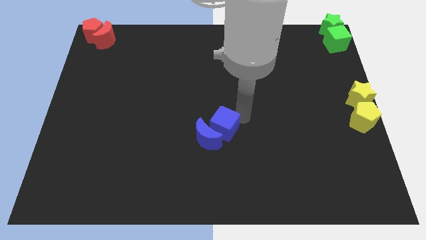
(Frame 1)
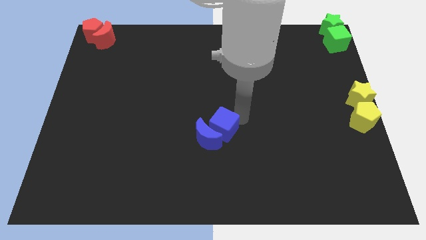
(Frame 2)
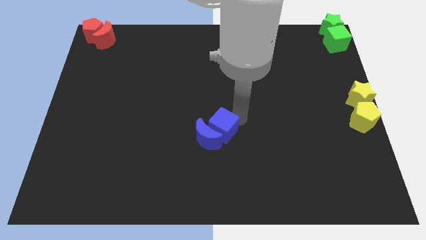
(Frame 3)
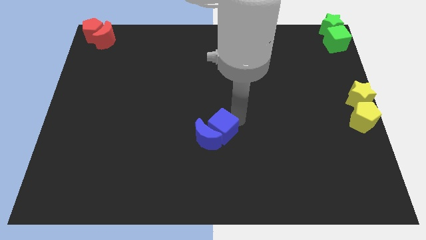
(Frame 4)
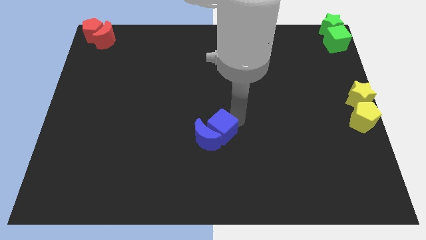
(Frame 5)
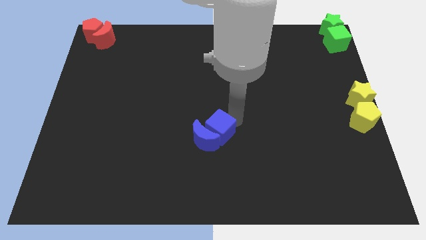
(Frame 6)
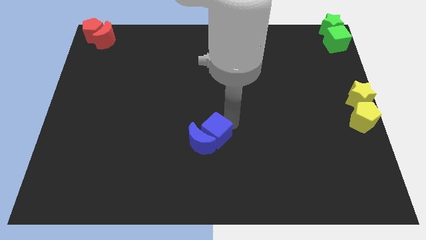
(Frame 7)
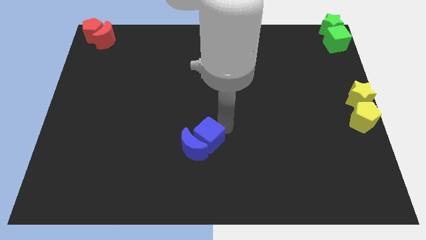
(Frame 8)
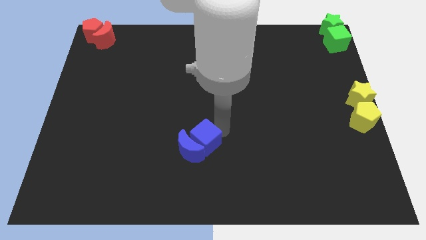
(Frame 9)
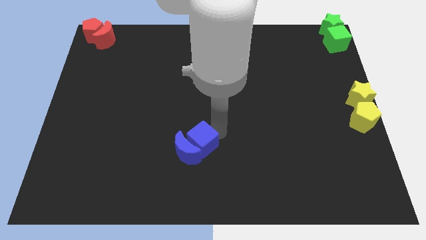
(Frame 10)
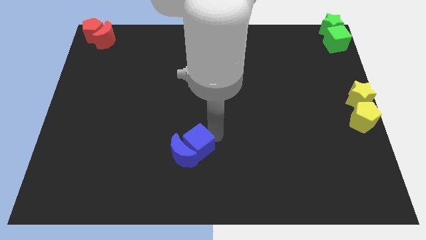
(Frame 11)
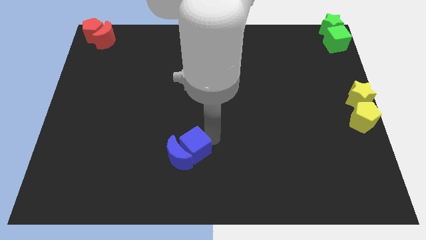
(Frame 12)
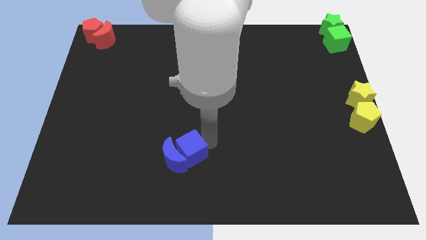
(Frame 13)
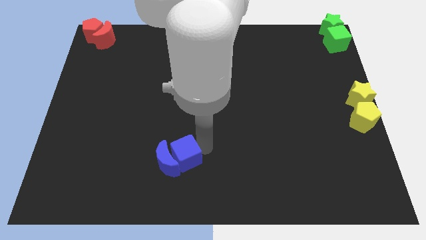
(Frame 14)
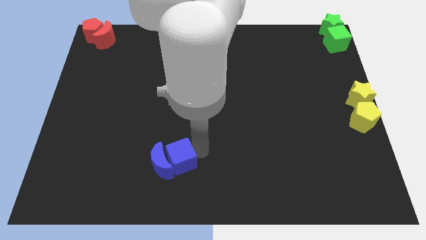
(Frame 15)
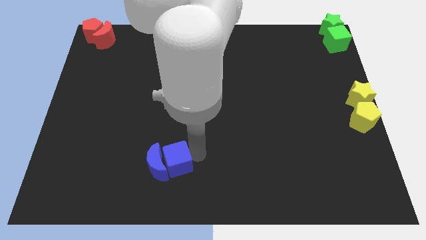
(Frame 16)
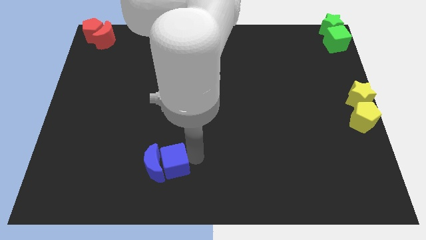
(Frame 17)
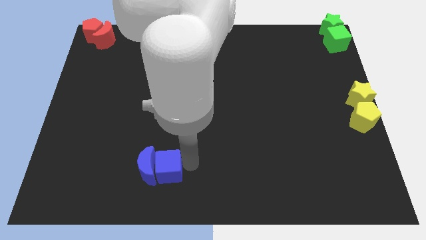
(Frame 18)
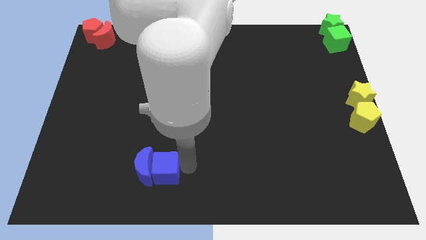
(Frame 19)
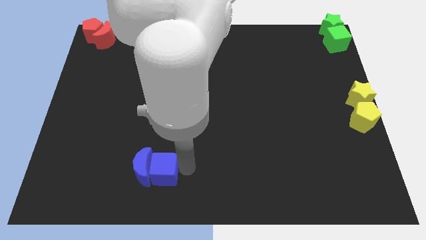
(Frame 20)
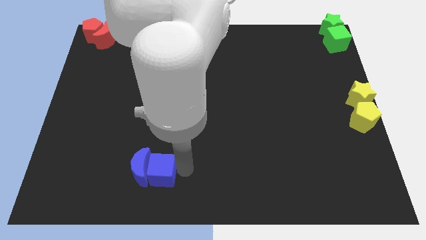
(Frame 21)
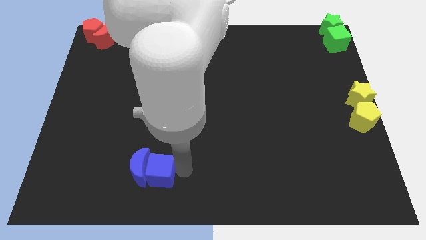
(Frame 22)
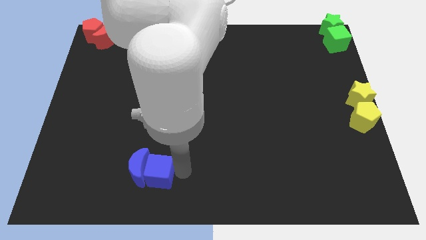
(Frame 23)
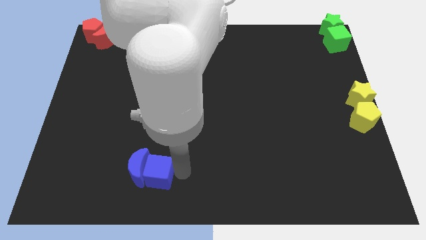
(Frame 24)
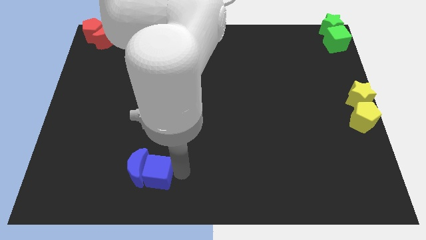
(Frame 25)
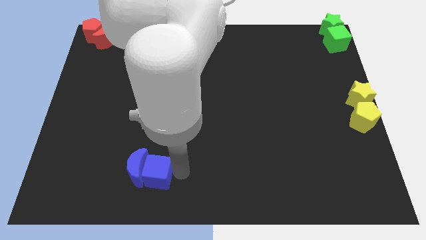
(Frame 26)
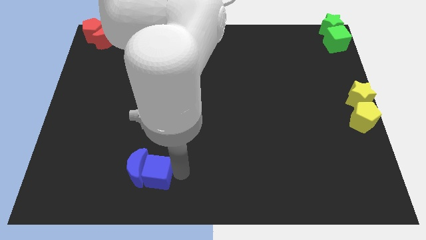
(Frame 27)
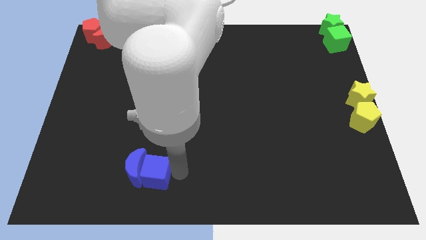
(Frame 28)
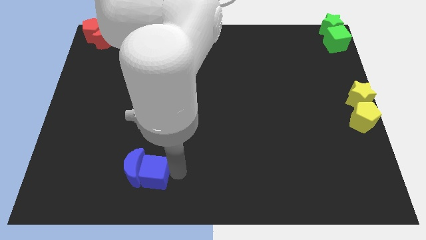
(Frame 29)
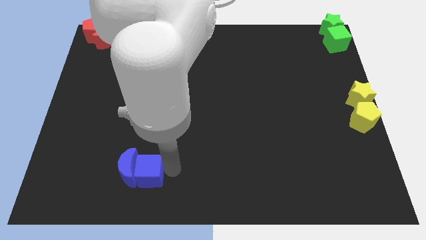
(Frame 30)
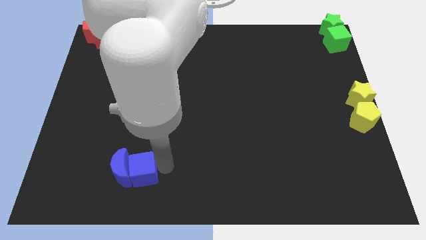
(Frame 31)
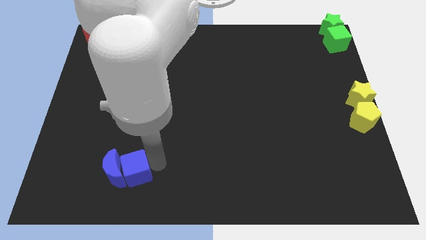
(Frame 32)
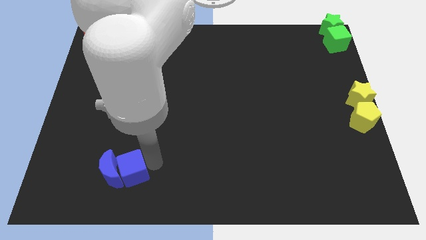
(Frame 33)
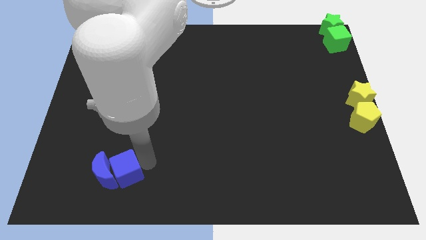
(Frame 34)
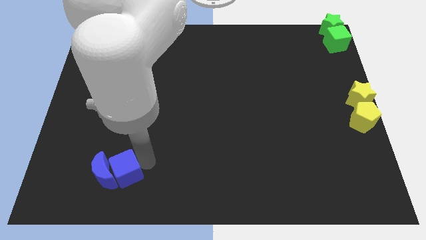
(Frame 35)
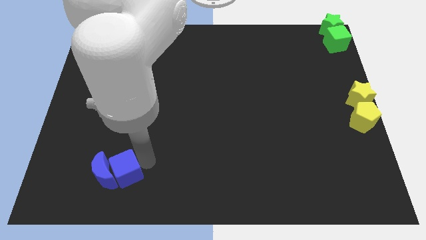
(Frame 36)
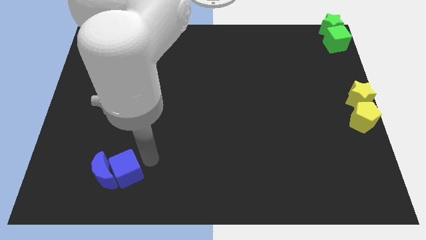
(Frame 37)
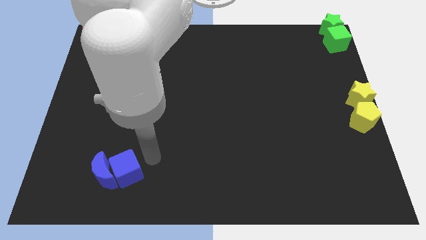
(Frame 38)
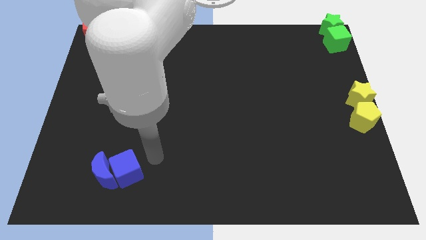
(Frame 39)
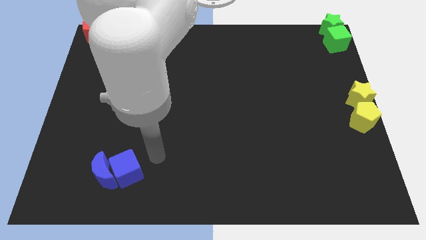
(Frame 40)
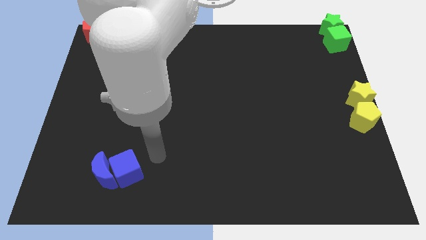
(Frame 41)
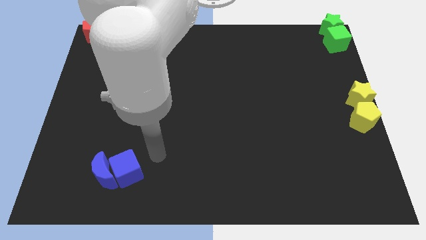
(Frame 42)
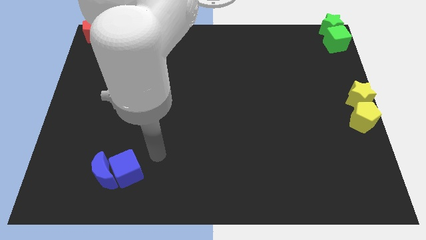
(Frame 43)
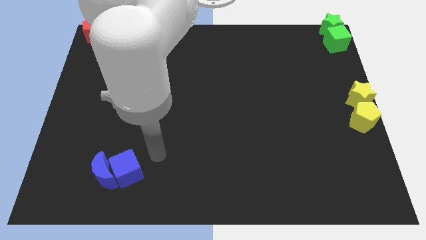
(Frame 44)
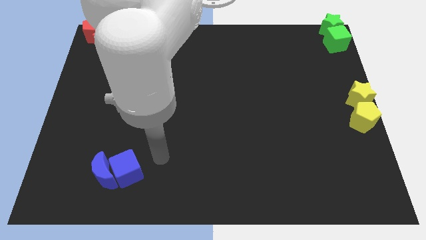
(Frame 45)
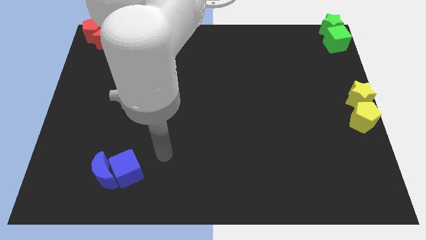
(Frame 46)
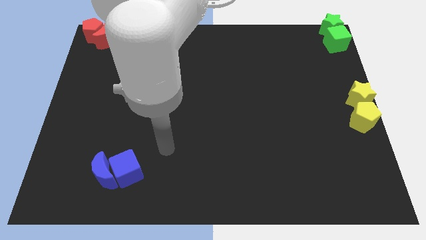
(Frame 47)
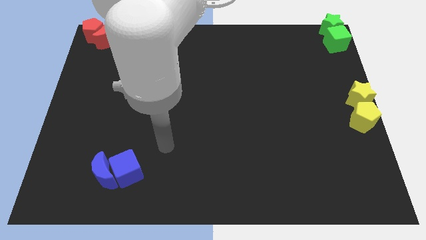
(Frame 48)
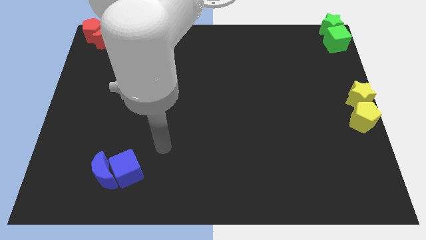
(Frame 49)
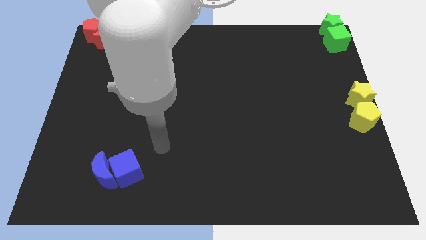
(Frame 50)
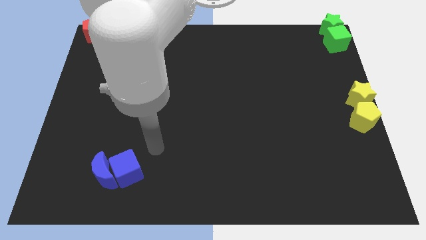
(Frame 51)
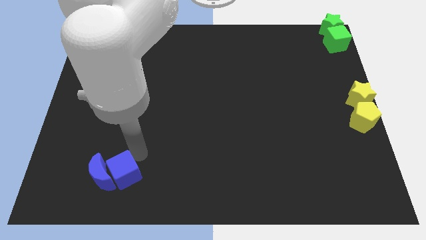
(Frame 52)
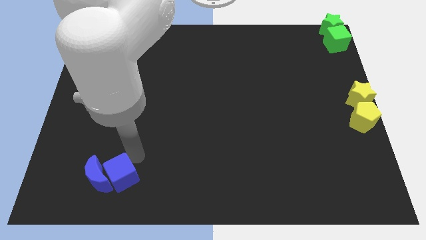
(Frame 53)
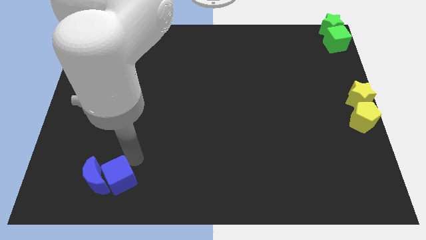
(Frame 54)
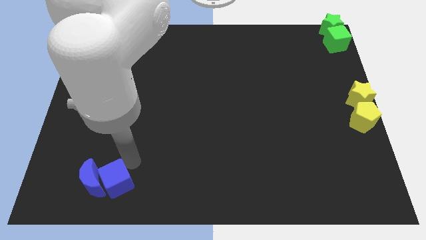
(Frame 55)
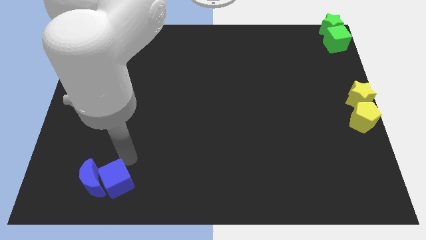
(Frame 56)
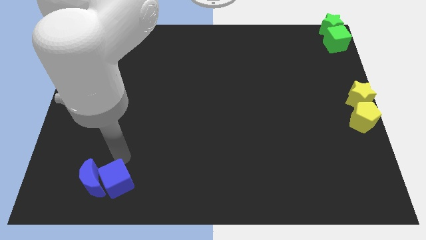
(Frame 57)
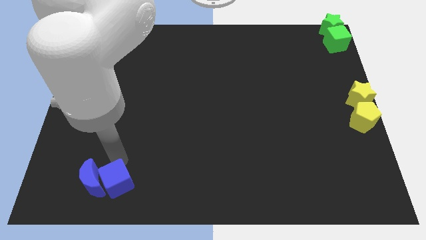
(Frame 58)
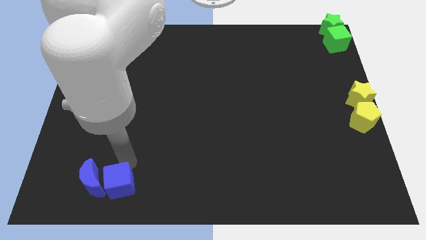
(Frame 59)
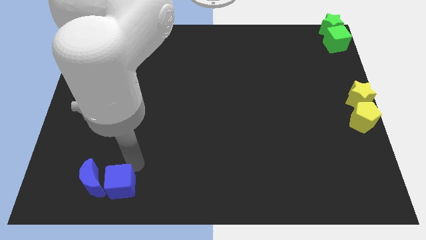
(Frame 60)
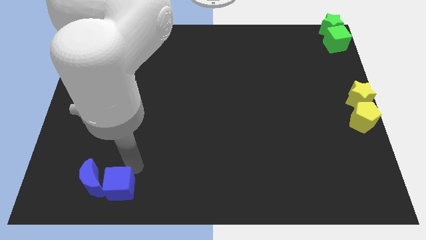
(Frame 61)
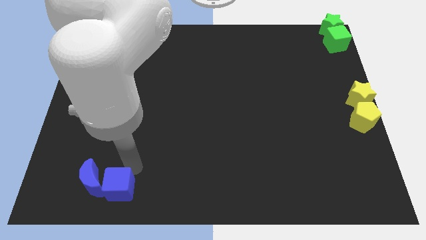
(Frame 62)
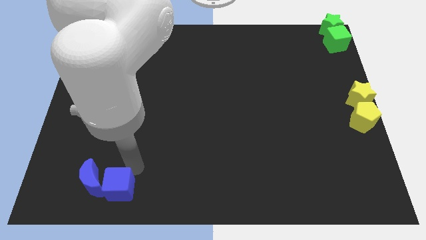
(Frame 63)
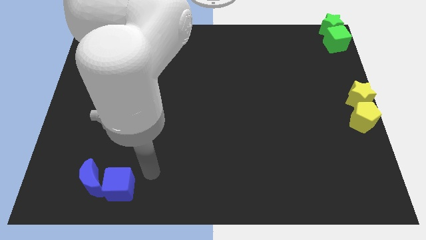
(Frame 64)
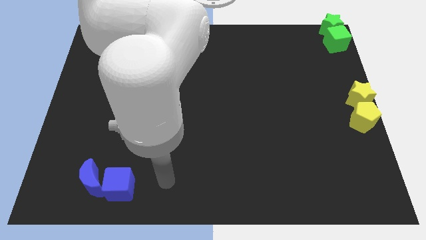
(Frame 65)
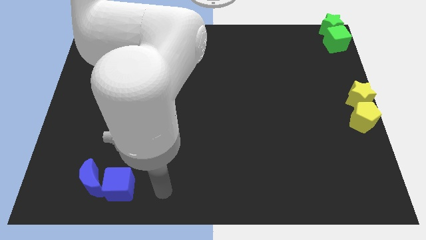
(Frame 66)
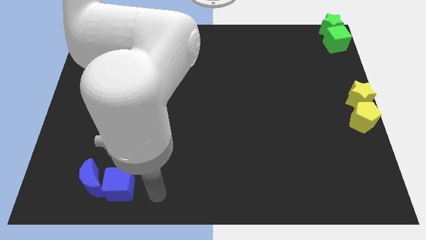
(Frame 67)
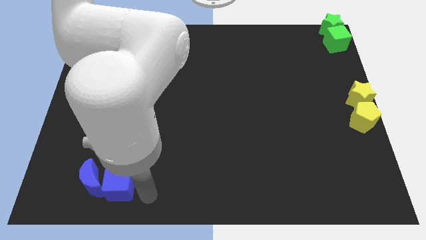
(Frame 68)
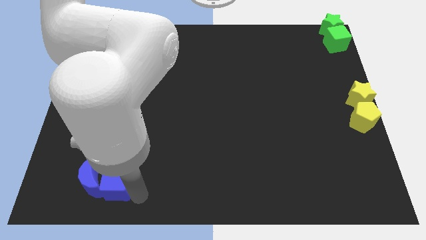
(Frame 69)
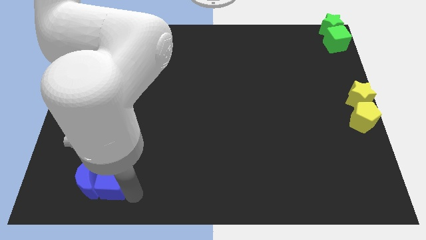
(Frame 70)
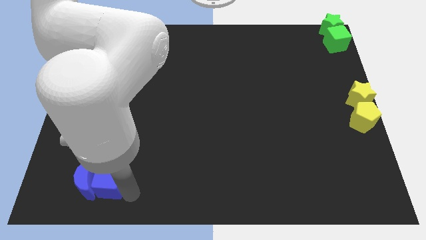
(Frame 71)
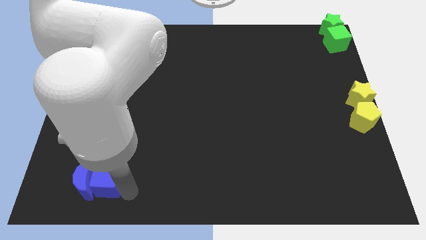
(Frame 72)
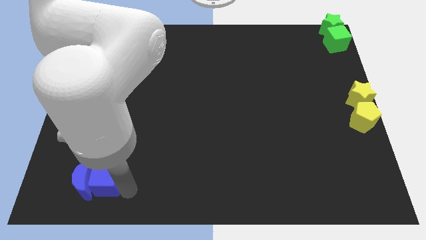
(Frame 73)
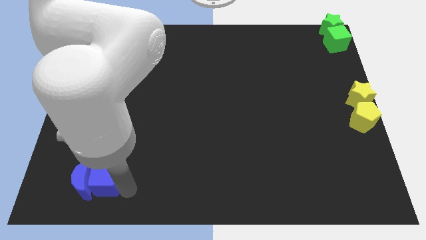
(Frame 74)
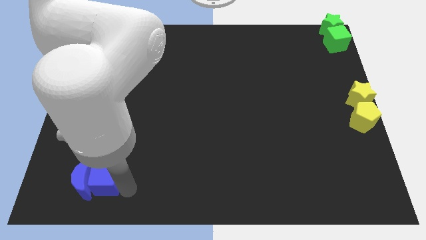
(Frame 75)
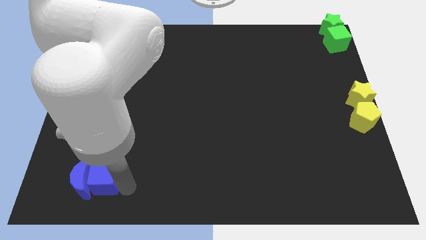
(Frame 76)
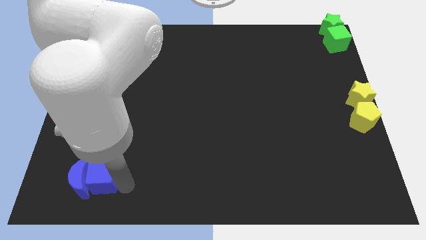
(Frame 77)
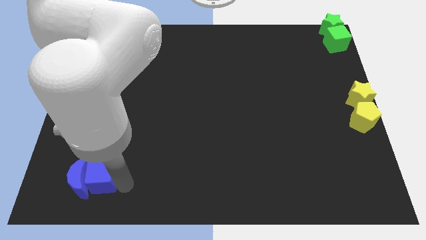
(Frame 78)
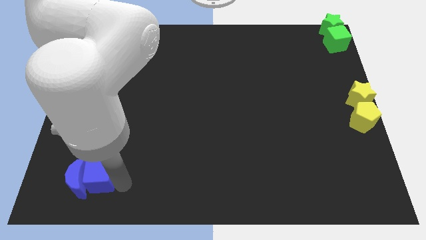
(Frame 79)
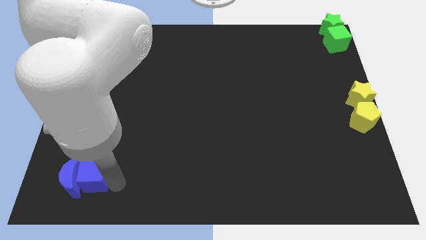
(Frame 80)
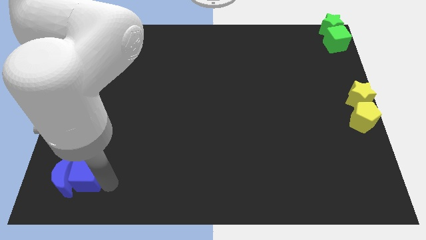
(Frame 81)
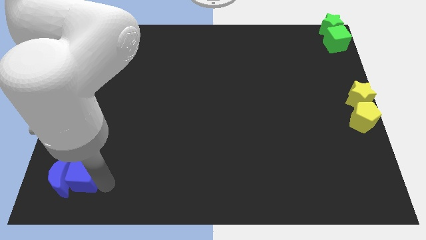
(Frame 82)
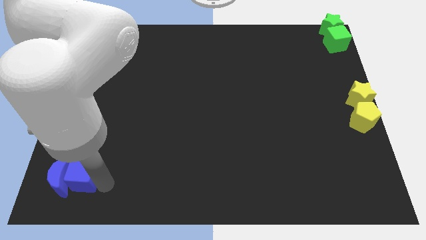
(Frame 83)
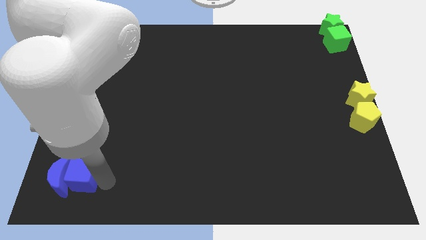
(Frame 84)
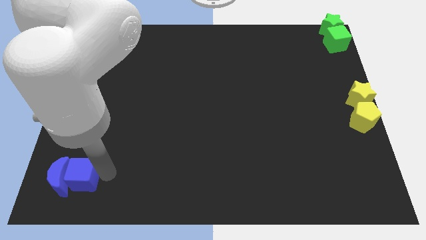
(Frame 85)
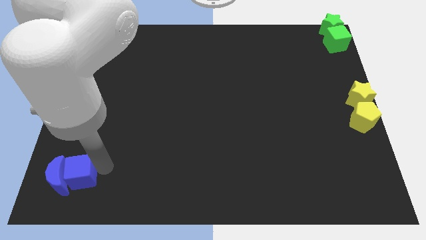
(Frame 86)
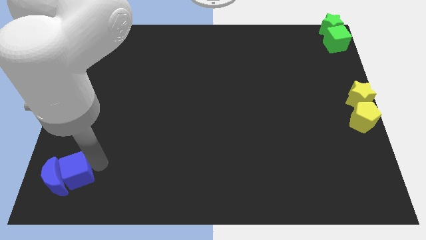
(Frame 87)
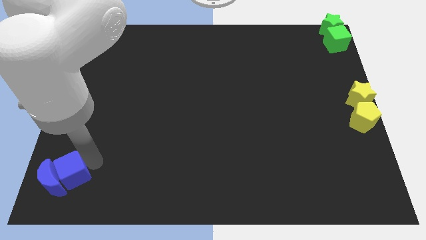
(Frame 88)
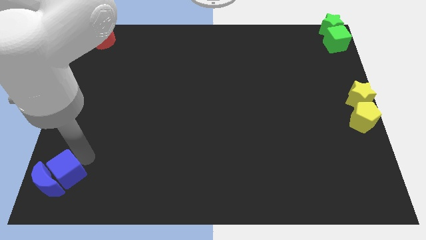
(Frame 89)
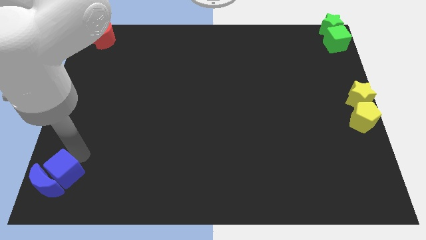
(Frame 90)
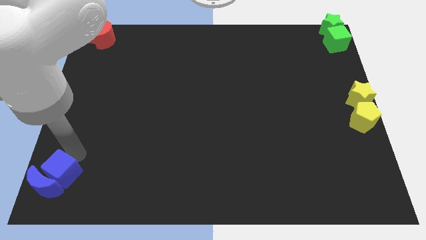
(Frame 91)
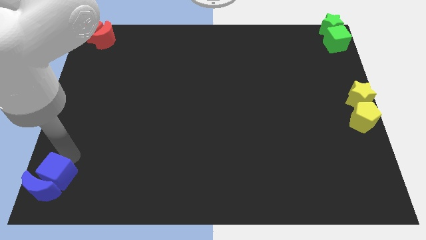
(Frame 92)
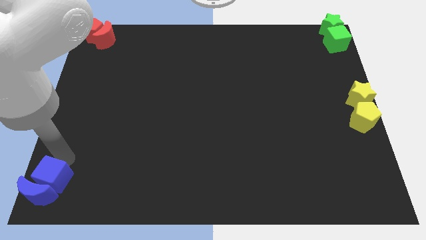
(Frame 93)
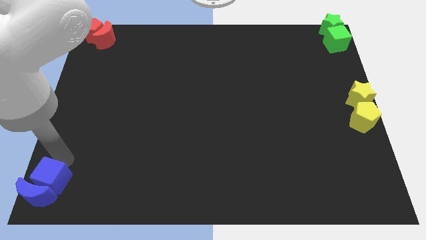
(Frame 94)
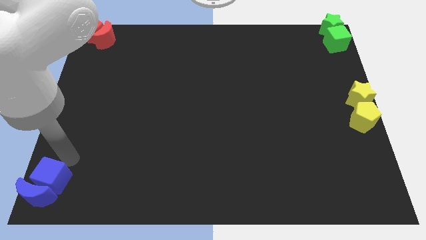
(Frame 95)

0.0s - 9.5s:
move the blue blocks to the bottom left corner of the board
